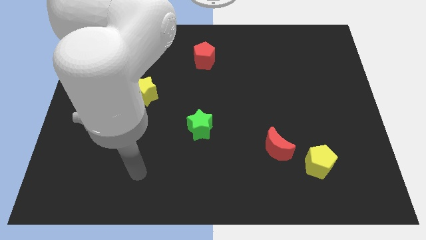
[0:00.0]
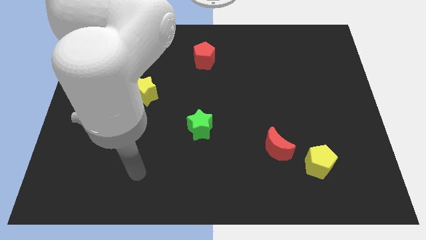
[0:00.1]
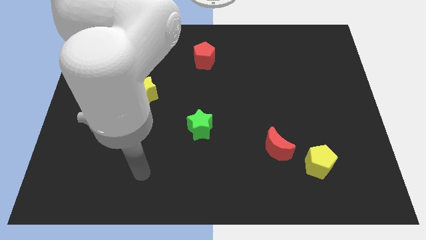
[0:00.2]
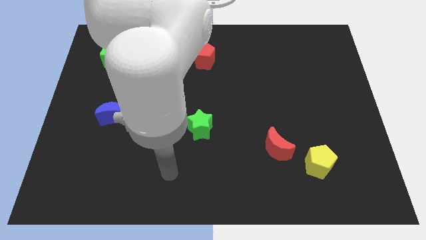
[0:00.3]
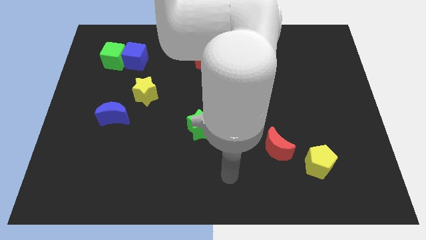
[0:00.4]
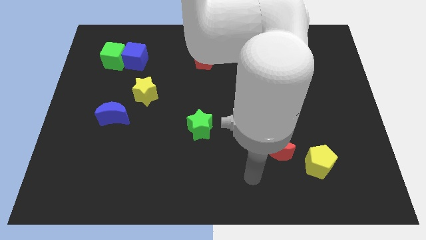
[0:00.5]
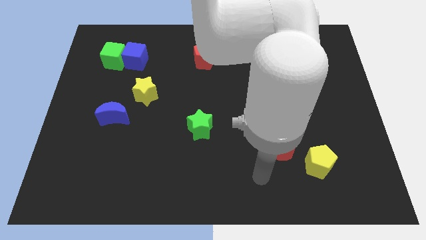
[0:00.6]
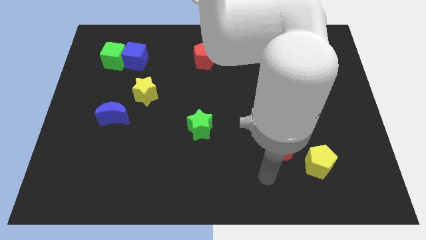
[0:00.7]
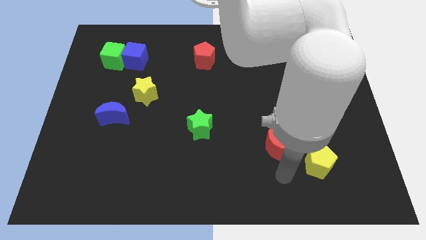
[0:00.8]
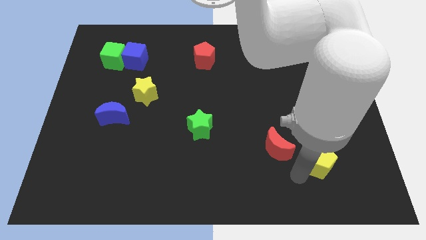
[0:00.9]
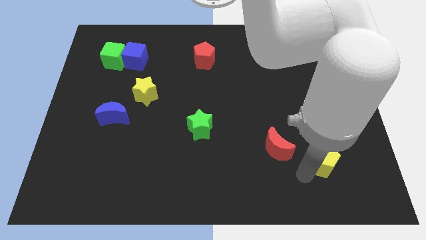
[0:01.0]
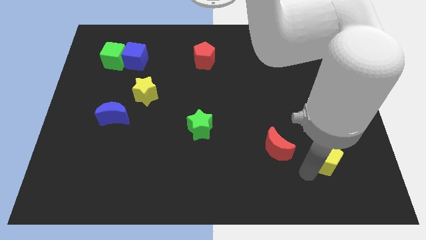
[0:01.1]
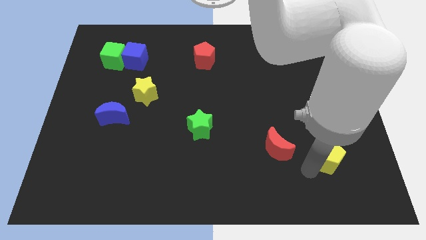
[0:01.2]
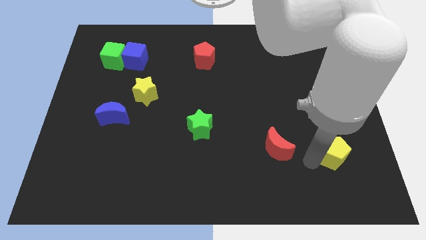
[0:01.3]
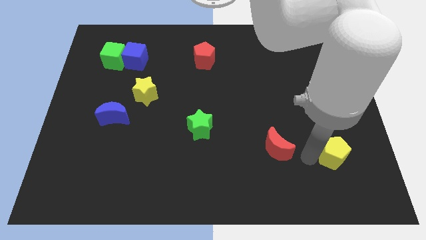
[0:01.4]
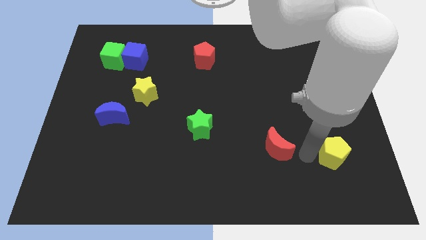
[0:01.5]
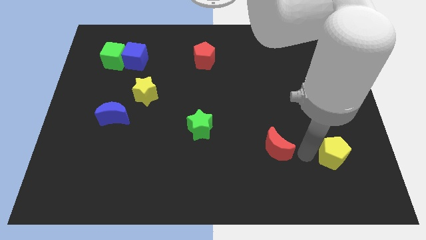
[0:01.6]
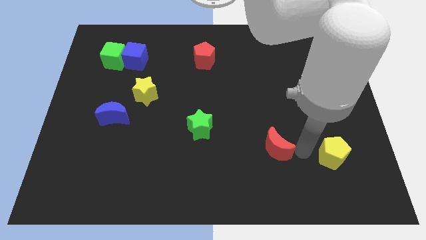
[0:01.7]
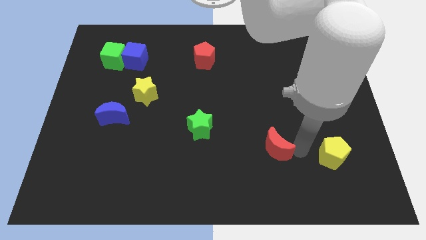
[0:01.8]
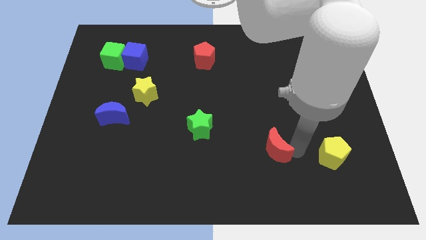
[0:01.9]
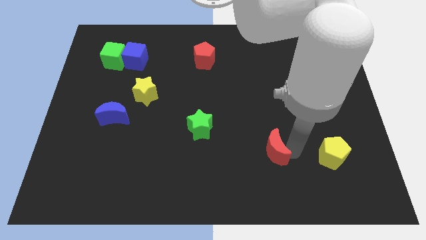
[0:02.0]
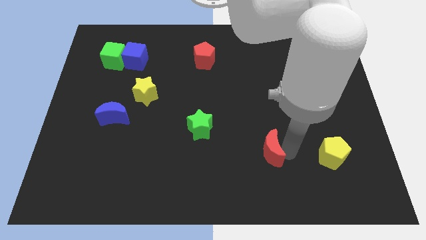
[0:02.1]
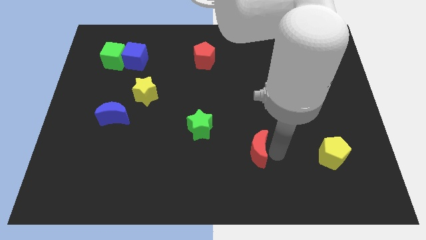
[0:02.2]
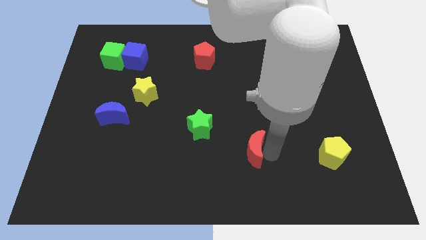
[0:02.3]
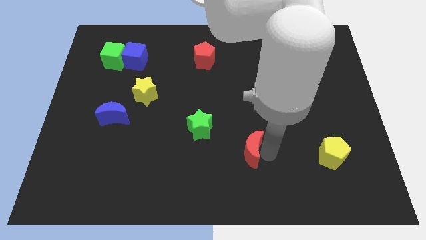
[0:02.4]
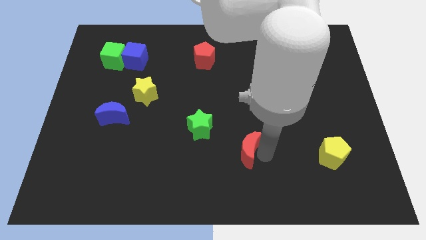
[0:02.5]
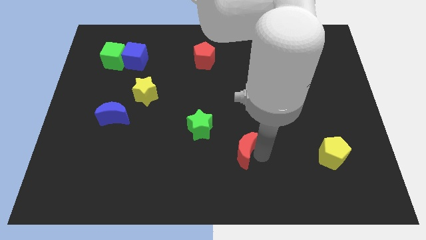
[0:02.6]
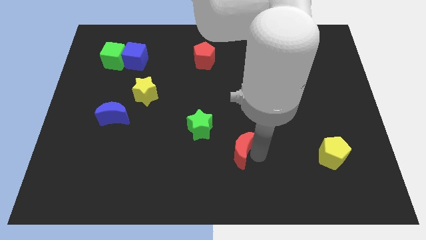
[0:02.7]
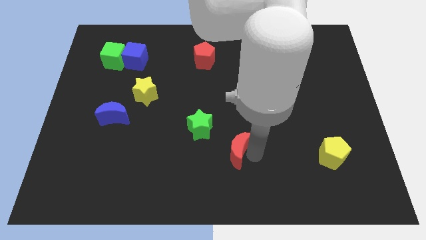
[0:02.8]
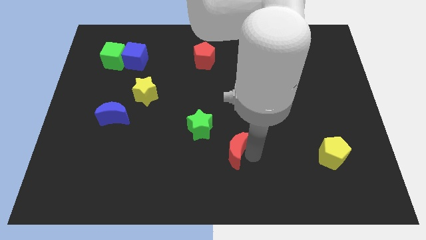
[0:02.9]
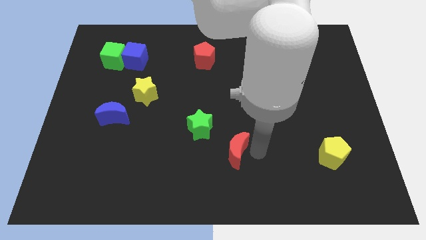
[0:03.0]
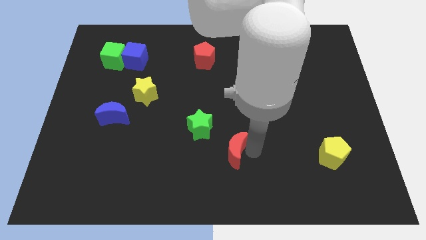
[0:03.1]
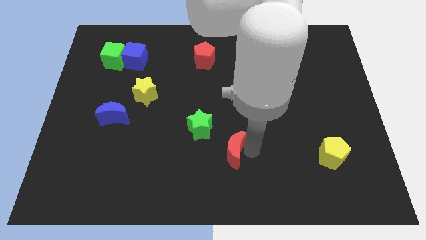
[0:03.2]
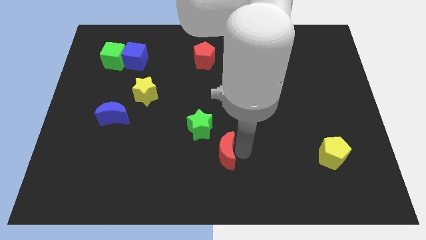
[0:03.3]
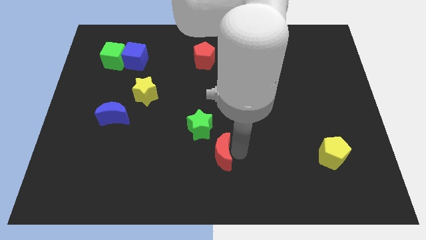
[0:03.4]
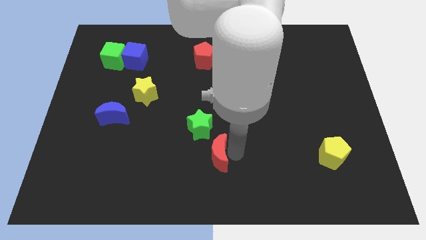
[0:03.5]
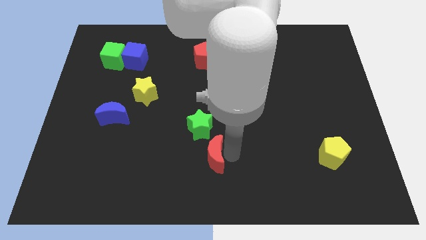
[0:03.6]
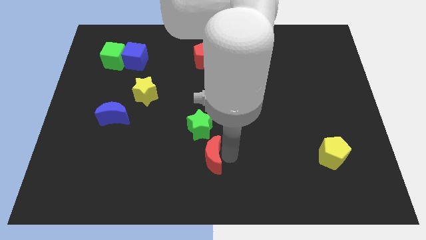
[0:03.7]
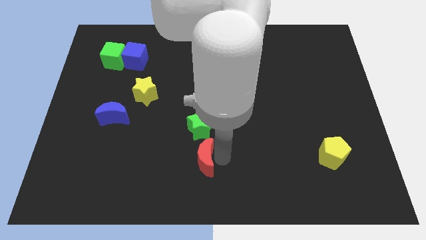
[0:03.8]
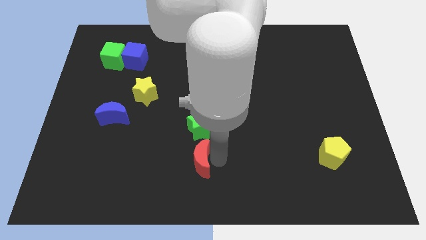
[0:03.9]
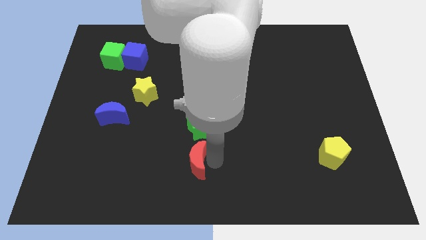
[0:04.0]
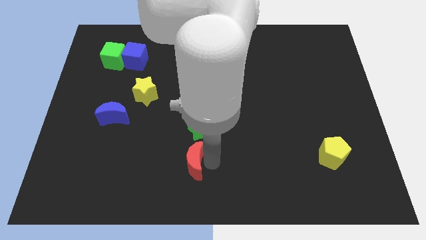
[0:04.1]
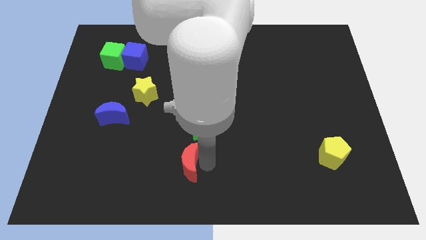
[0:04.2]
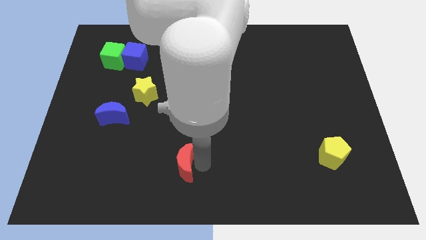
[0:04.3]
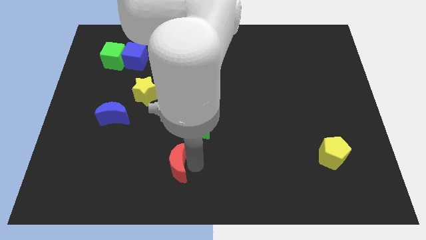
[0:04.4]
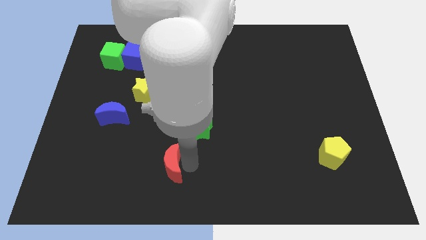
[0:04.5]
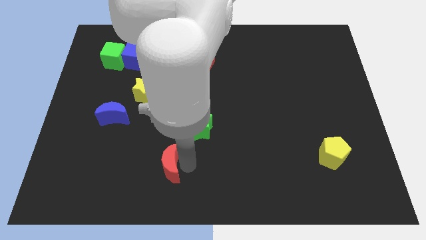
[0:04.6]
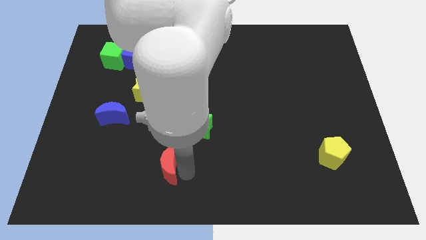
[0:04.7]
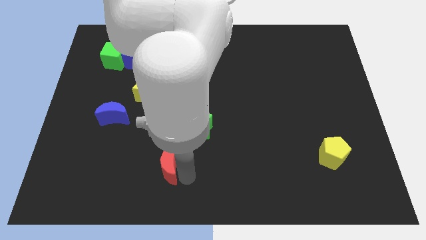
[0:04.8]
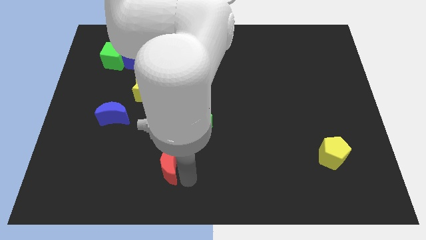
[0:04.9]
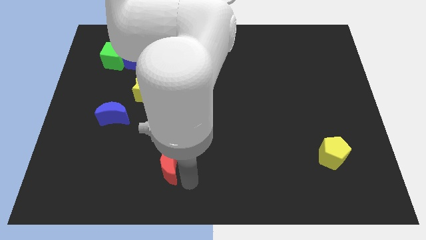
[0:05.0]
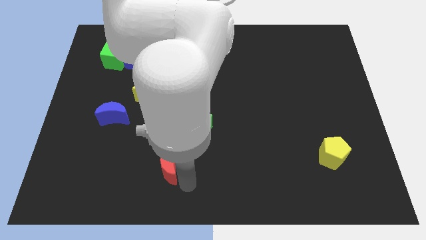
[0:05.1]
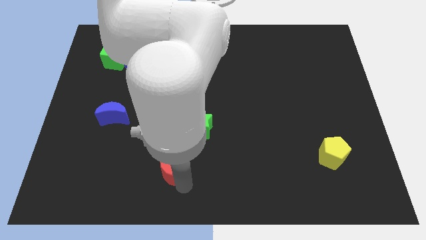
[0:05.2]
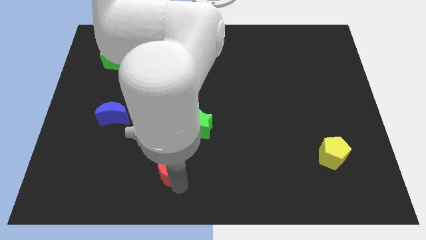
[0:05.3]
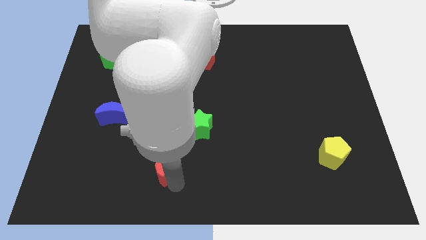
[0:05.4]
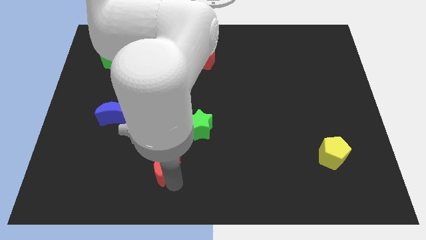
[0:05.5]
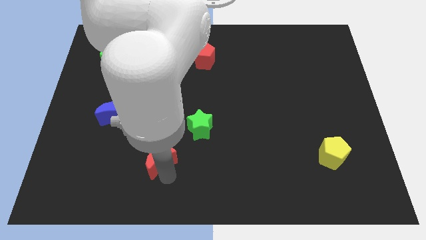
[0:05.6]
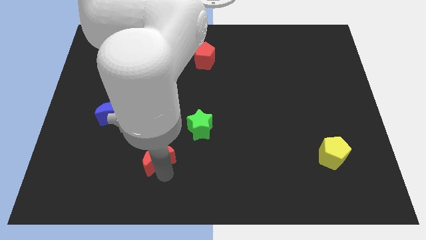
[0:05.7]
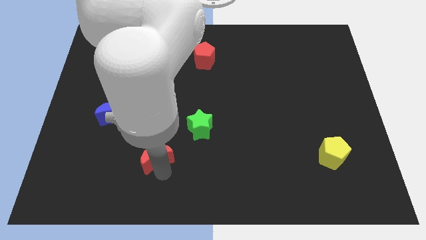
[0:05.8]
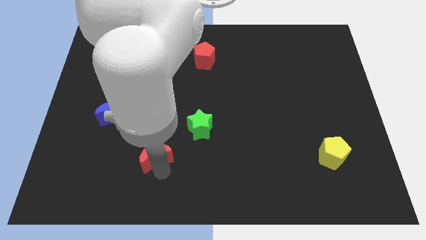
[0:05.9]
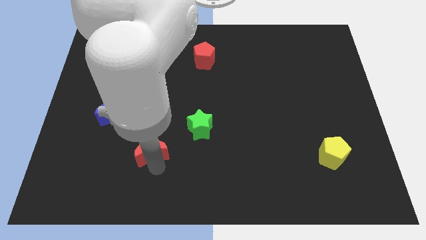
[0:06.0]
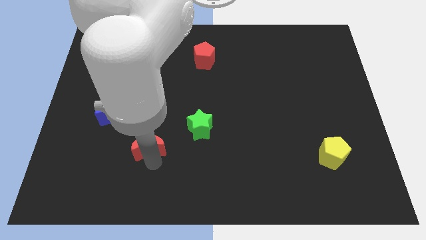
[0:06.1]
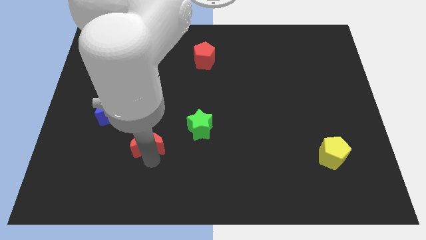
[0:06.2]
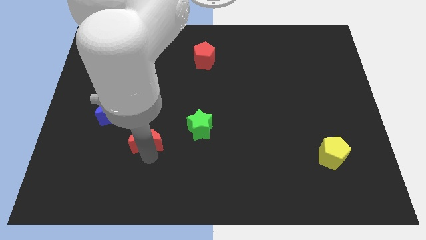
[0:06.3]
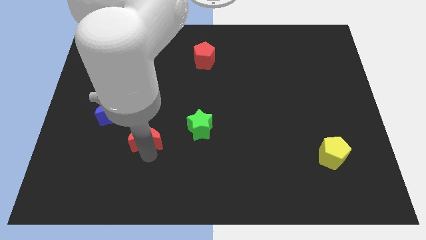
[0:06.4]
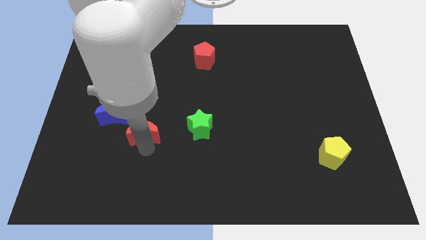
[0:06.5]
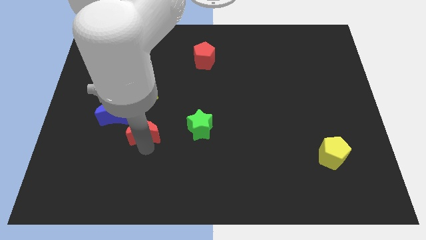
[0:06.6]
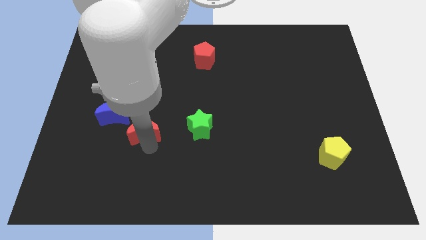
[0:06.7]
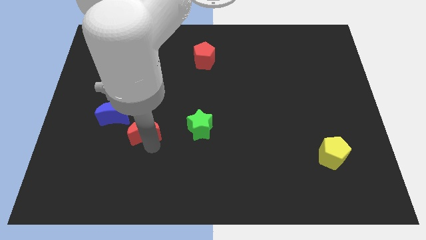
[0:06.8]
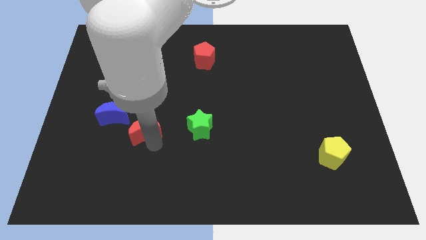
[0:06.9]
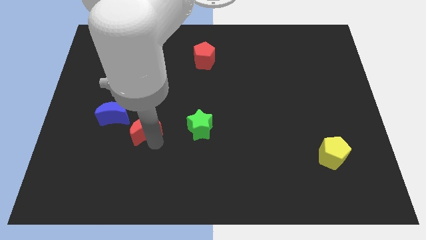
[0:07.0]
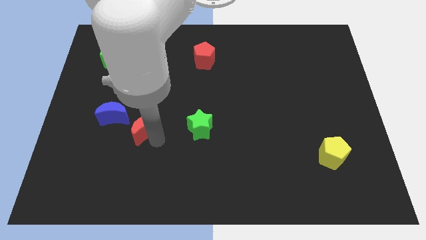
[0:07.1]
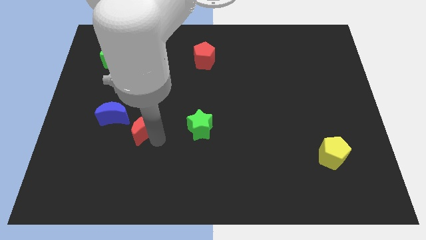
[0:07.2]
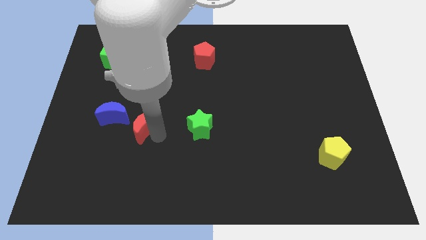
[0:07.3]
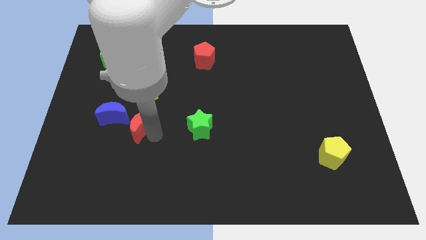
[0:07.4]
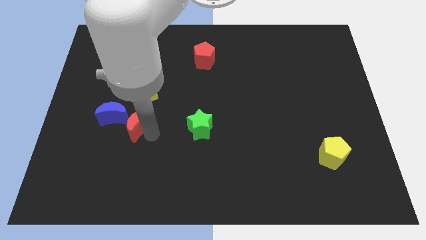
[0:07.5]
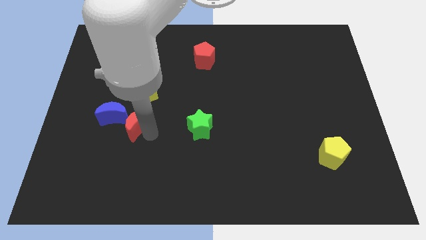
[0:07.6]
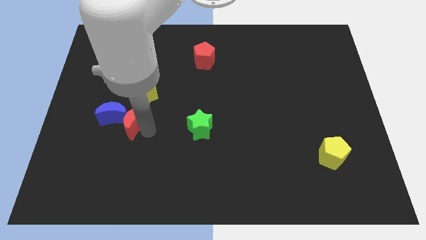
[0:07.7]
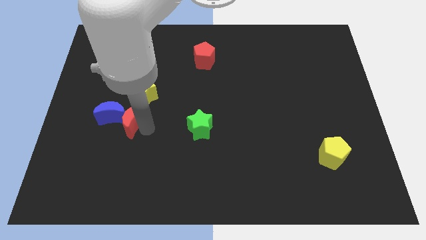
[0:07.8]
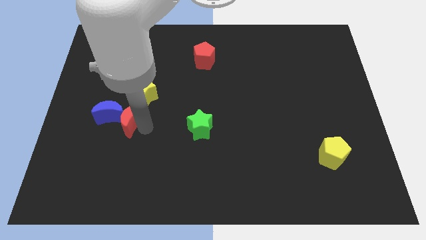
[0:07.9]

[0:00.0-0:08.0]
slide the red moon to the blue moon
